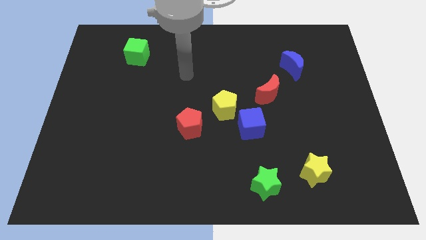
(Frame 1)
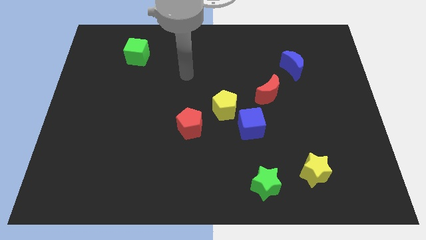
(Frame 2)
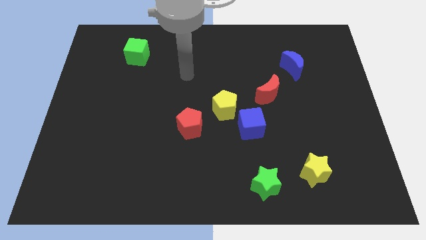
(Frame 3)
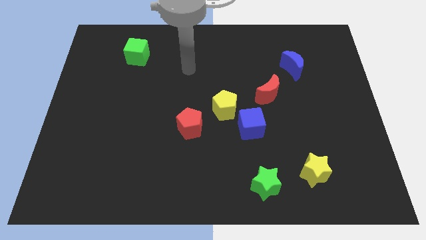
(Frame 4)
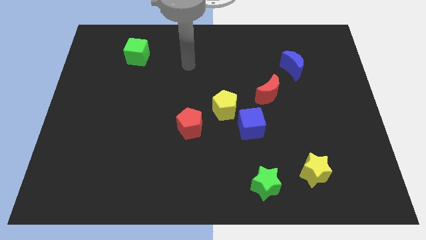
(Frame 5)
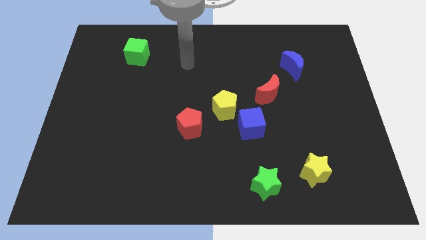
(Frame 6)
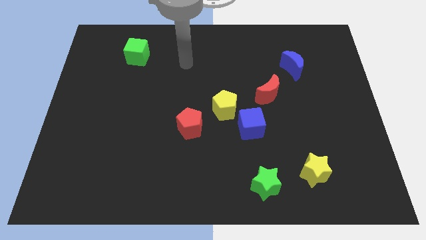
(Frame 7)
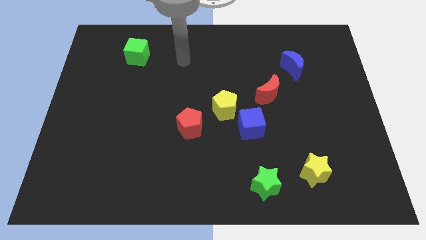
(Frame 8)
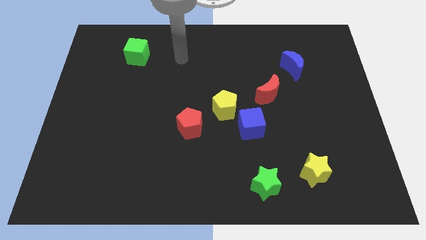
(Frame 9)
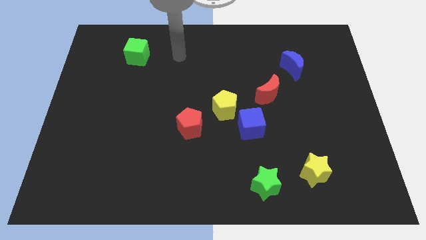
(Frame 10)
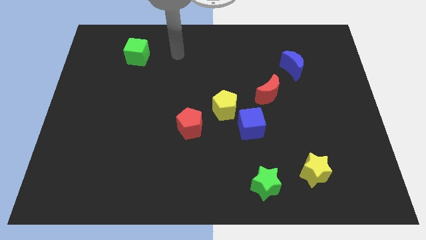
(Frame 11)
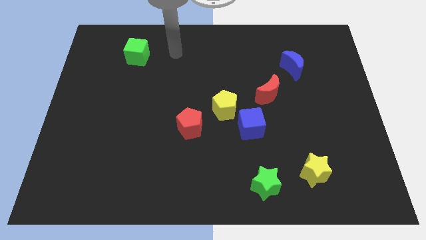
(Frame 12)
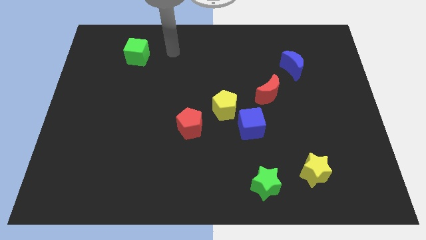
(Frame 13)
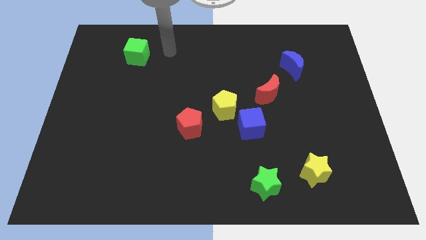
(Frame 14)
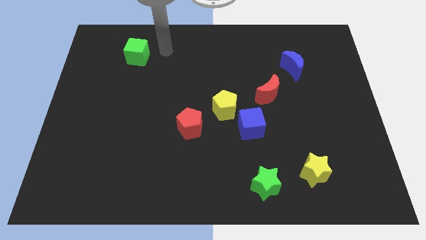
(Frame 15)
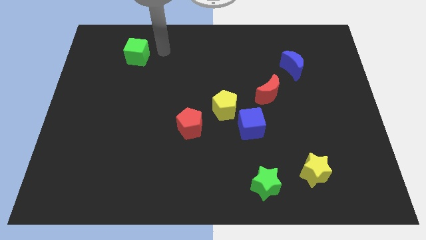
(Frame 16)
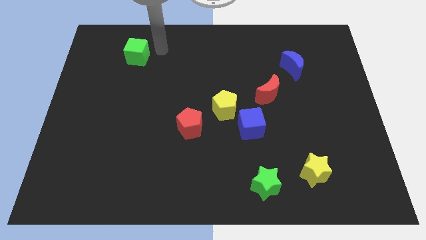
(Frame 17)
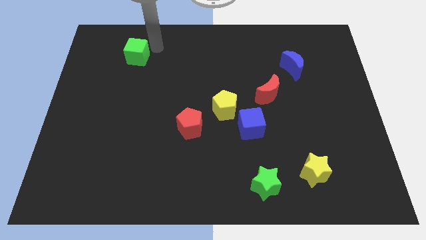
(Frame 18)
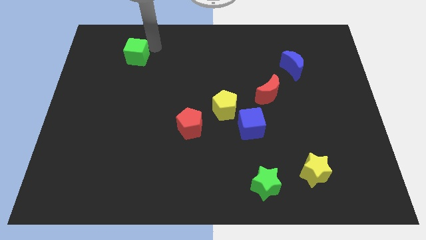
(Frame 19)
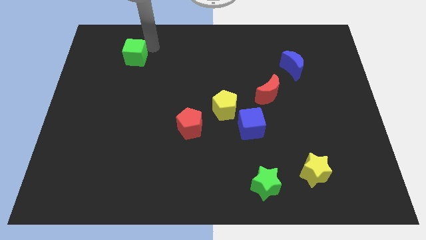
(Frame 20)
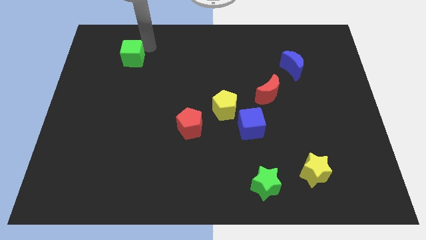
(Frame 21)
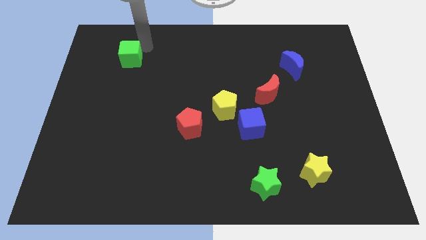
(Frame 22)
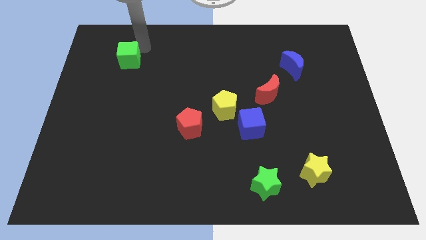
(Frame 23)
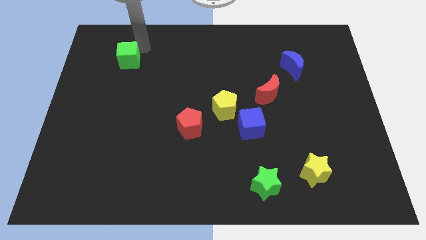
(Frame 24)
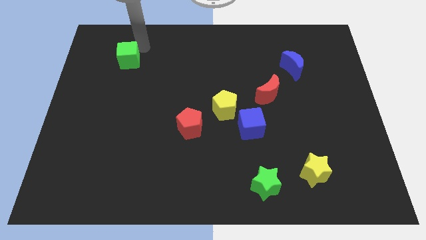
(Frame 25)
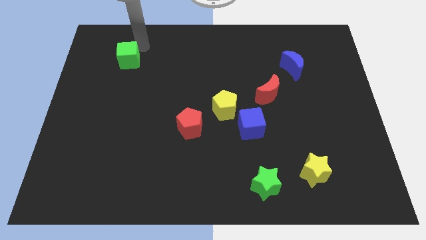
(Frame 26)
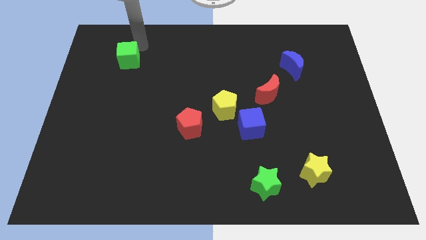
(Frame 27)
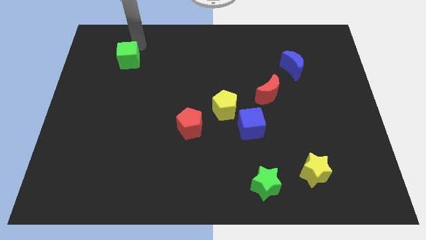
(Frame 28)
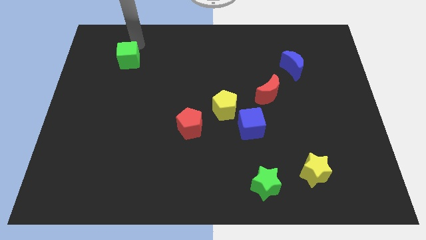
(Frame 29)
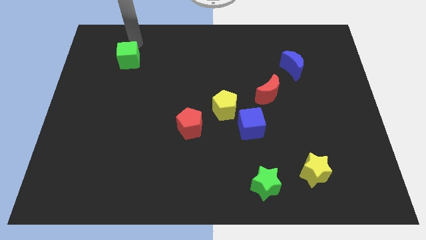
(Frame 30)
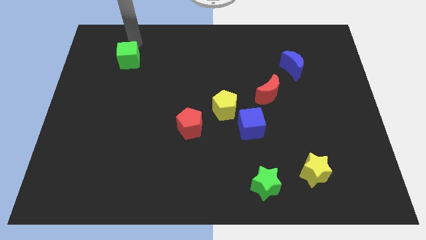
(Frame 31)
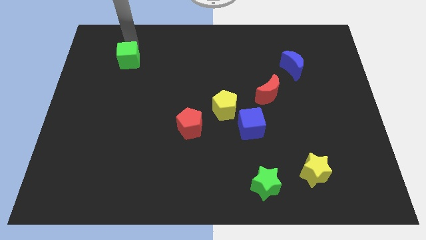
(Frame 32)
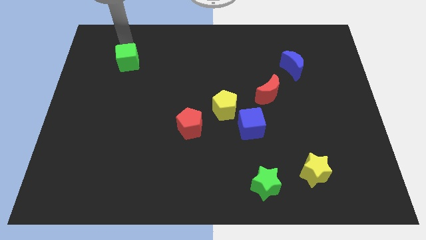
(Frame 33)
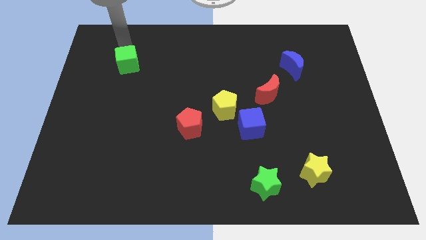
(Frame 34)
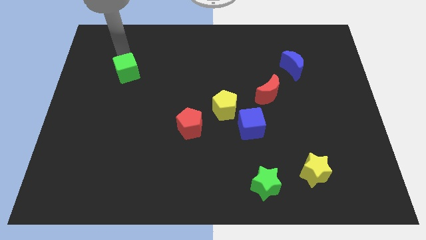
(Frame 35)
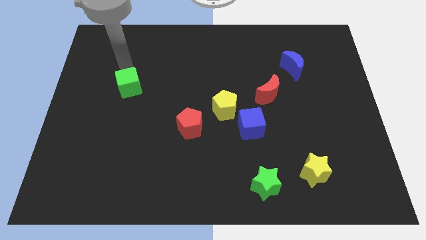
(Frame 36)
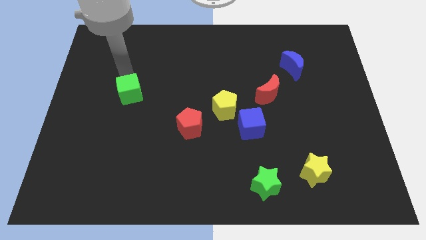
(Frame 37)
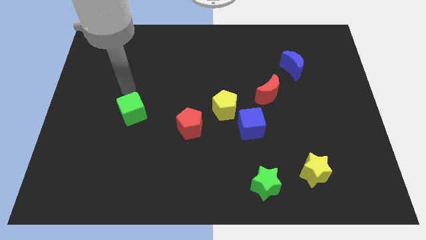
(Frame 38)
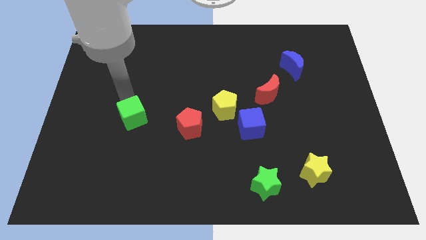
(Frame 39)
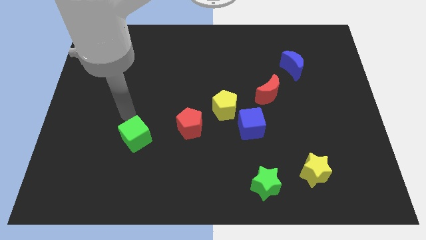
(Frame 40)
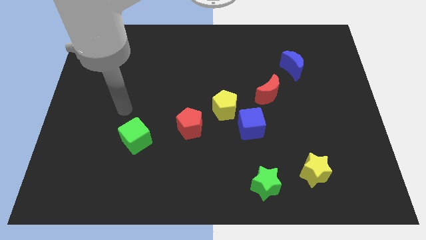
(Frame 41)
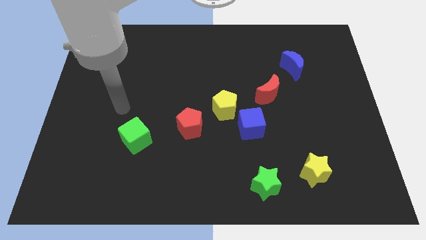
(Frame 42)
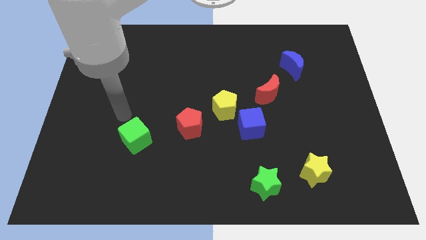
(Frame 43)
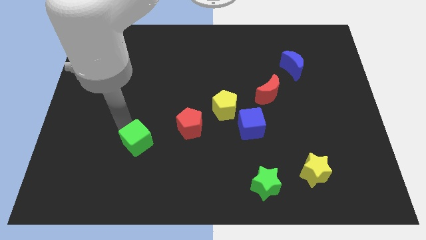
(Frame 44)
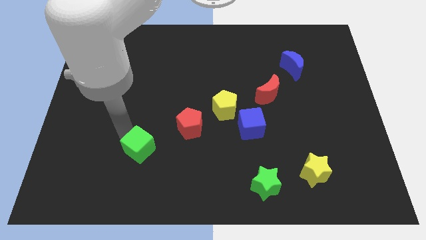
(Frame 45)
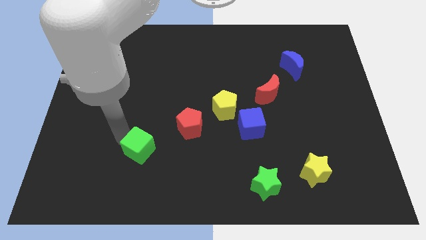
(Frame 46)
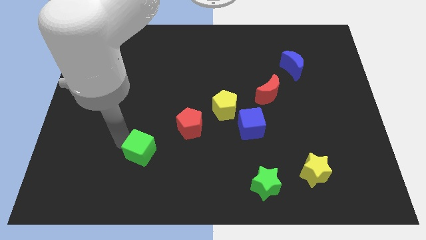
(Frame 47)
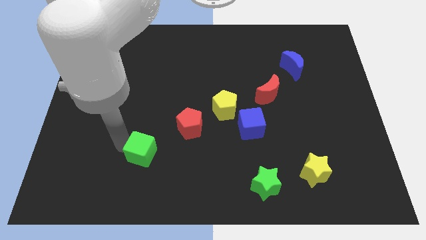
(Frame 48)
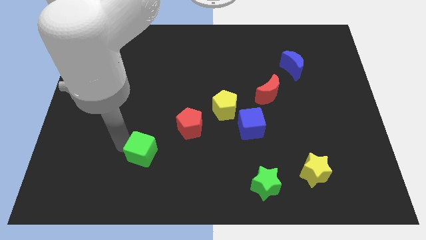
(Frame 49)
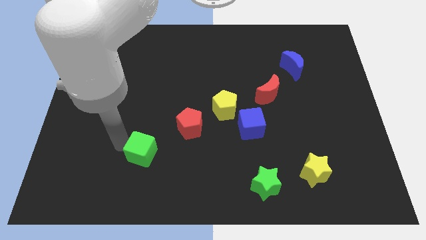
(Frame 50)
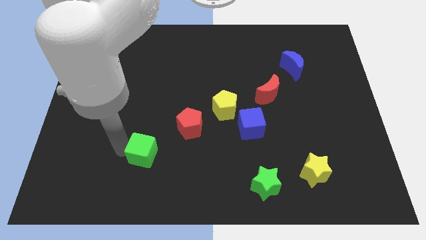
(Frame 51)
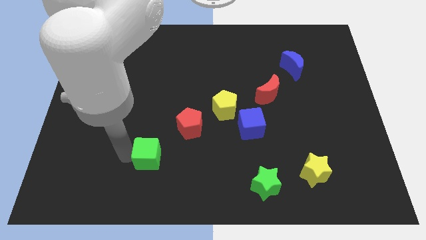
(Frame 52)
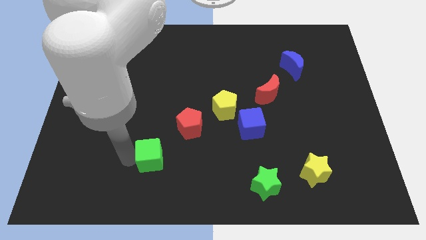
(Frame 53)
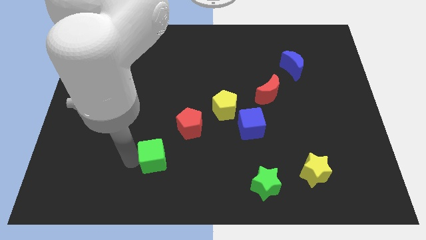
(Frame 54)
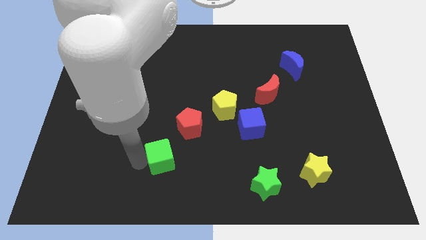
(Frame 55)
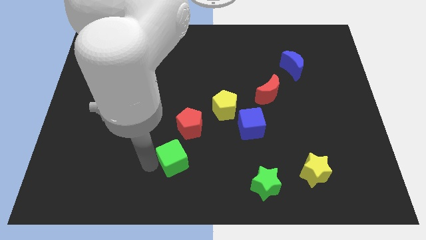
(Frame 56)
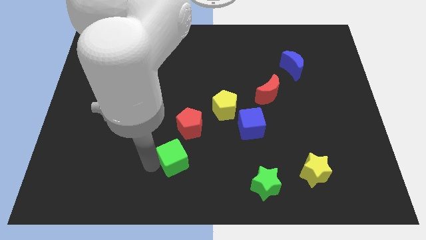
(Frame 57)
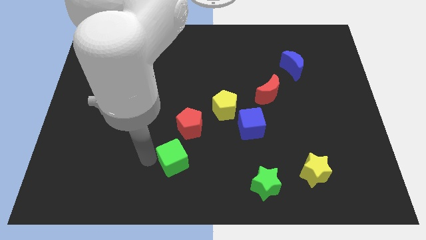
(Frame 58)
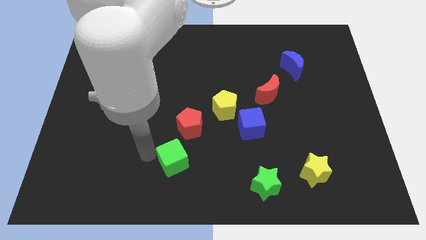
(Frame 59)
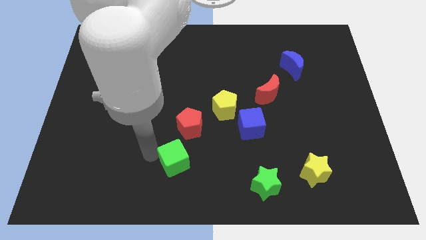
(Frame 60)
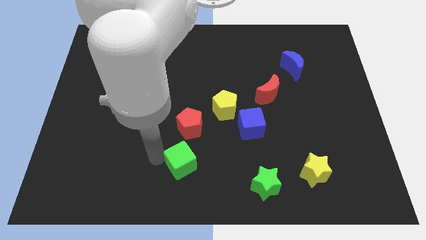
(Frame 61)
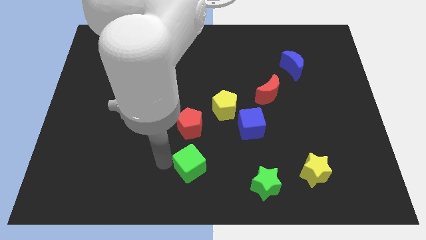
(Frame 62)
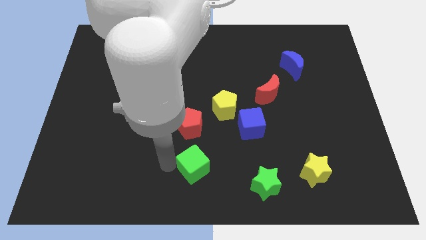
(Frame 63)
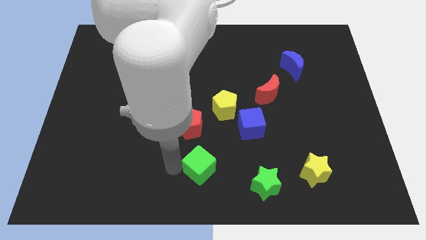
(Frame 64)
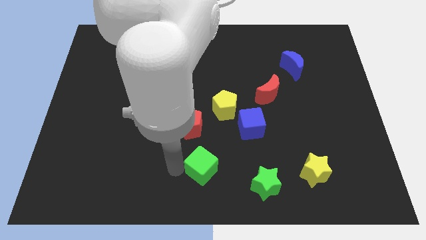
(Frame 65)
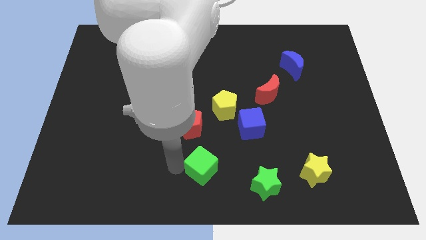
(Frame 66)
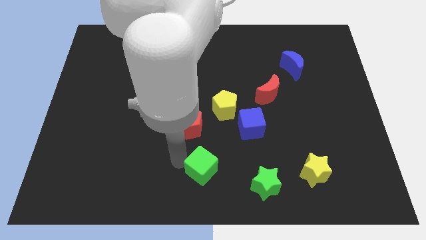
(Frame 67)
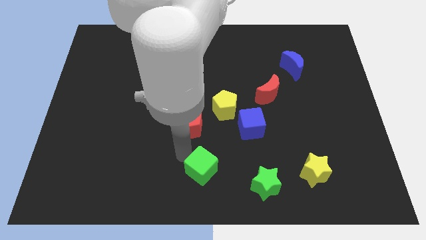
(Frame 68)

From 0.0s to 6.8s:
move the green block to the bottom center

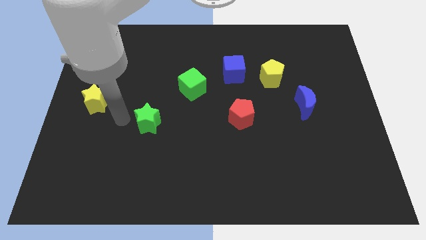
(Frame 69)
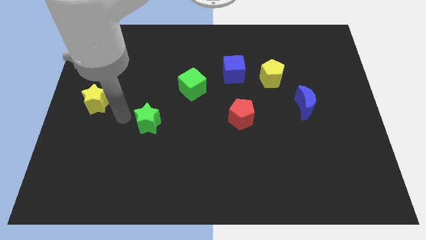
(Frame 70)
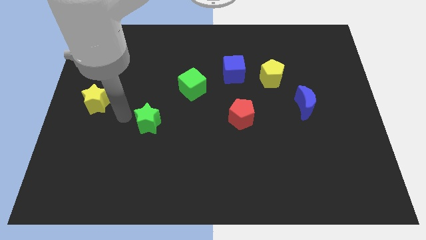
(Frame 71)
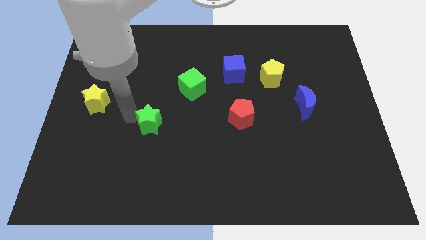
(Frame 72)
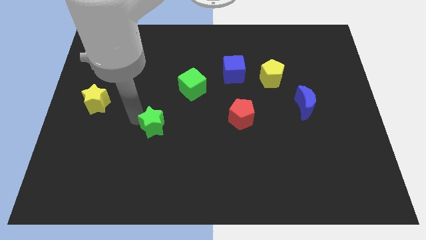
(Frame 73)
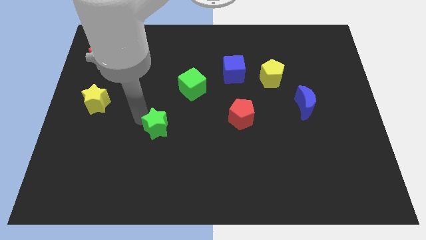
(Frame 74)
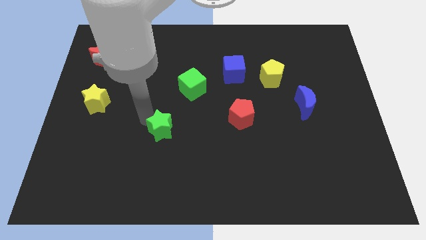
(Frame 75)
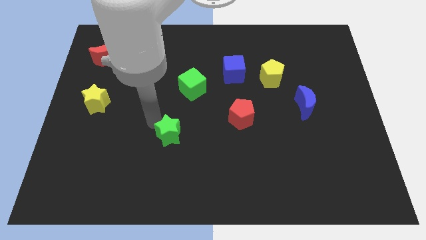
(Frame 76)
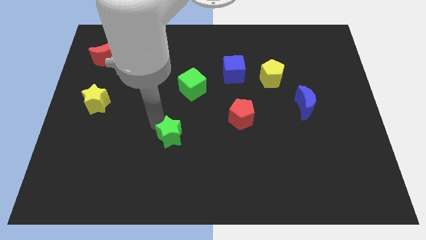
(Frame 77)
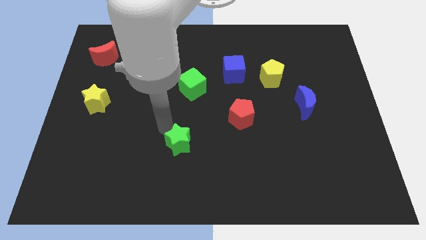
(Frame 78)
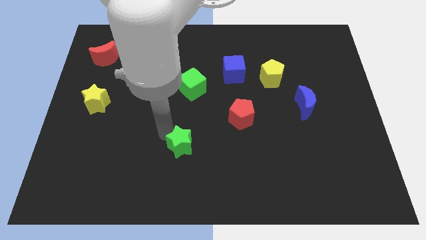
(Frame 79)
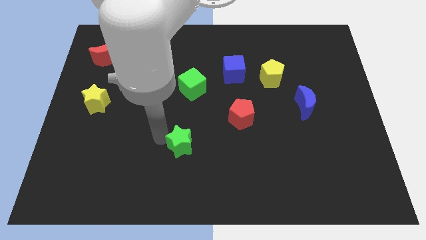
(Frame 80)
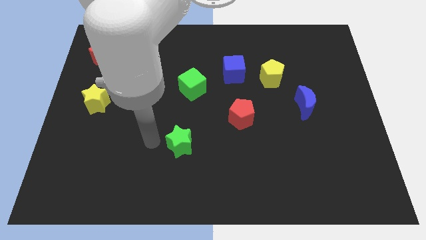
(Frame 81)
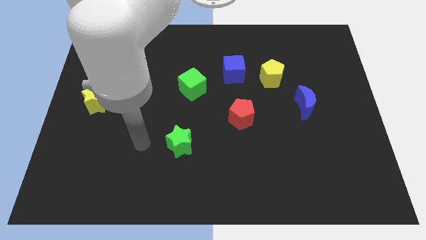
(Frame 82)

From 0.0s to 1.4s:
push the green star towards the bottom center of the board

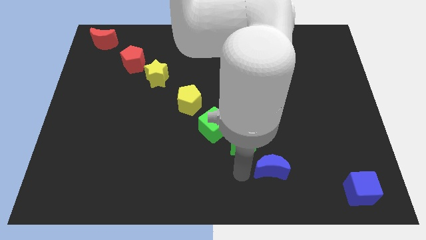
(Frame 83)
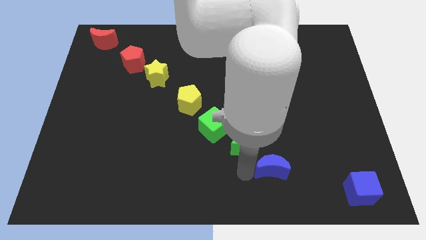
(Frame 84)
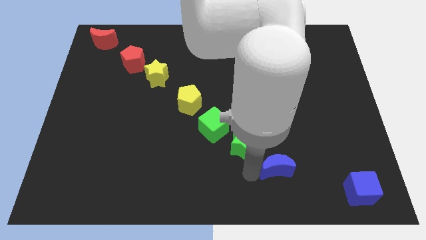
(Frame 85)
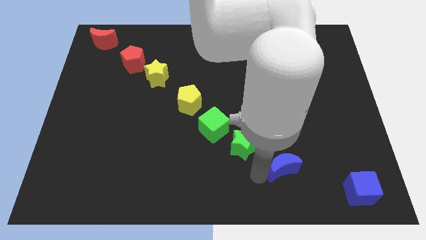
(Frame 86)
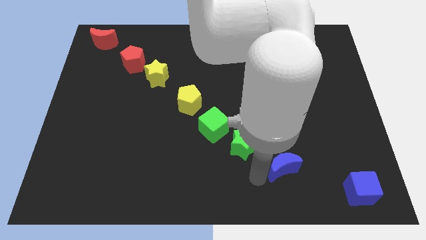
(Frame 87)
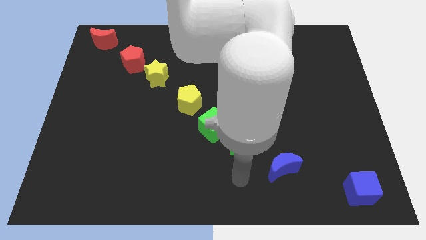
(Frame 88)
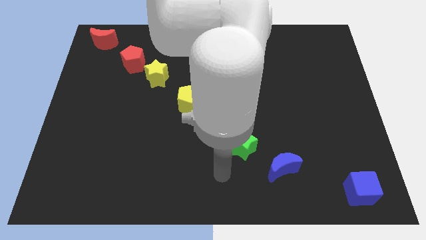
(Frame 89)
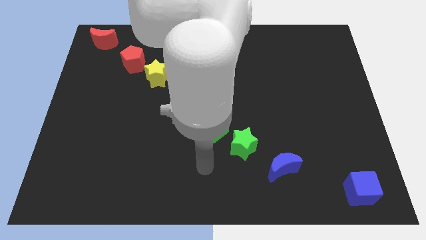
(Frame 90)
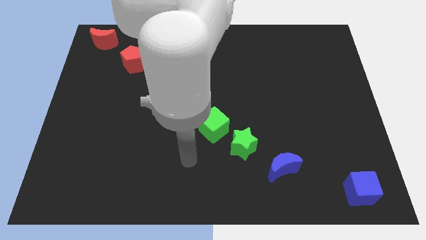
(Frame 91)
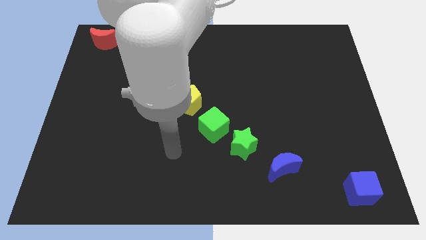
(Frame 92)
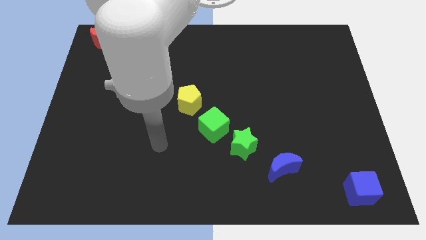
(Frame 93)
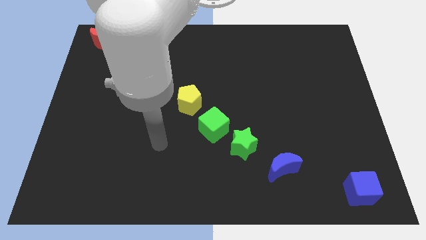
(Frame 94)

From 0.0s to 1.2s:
slightly push the blue moon to the right
